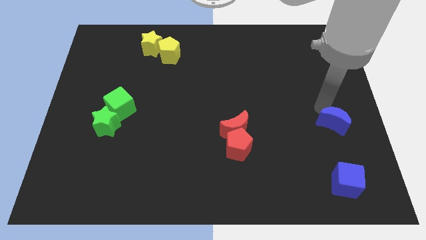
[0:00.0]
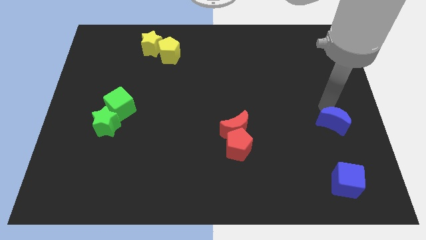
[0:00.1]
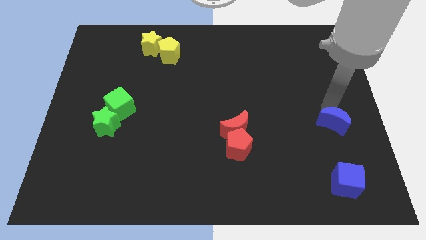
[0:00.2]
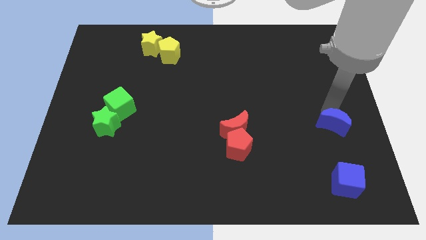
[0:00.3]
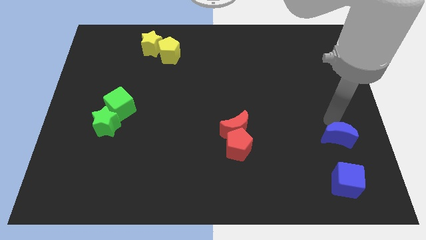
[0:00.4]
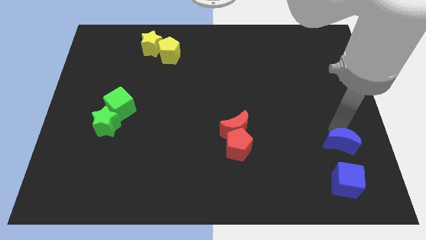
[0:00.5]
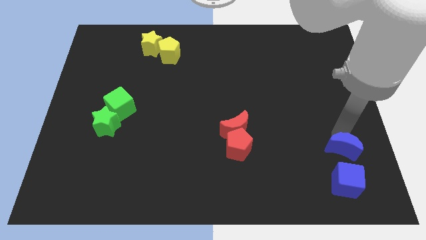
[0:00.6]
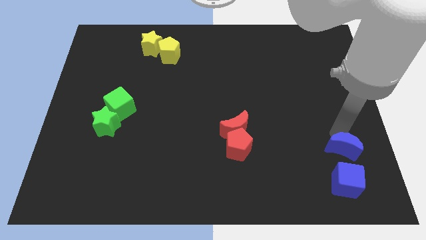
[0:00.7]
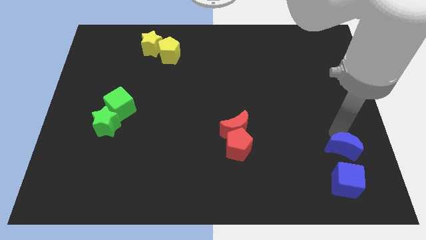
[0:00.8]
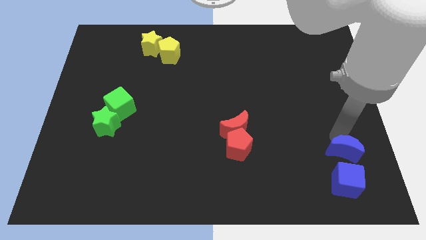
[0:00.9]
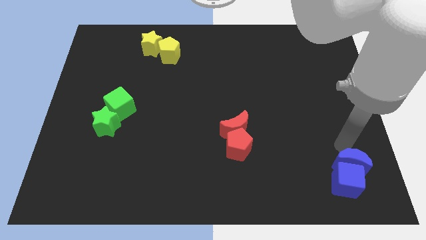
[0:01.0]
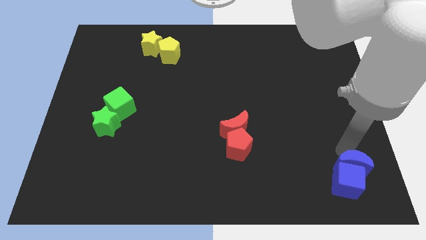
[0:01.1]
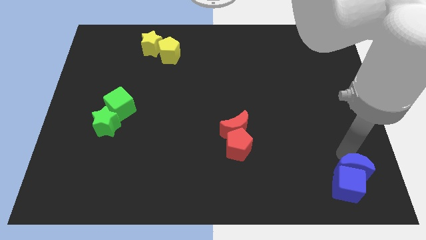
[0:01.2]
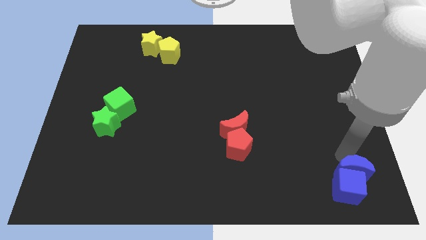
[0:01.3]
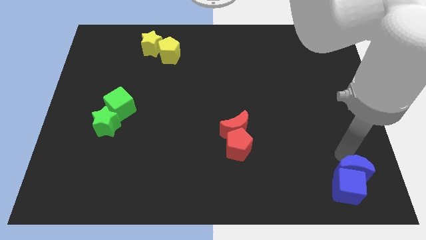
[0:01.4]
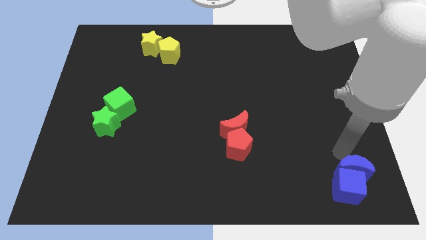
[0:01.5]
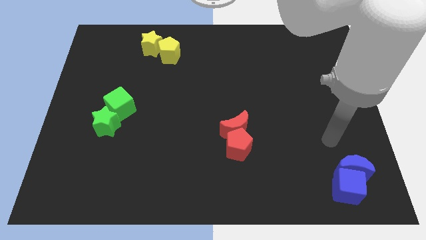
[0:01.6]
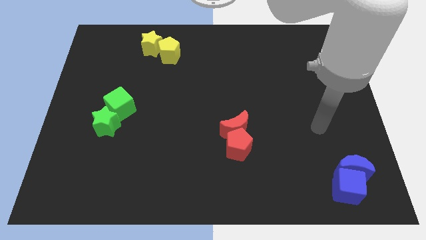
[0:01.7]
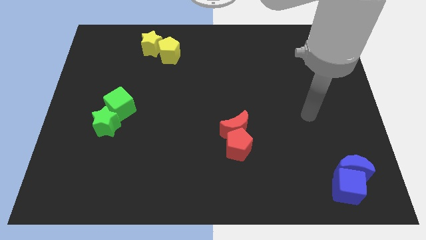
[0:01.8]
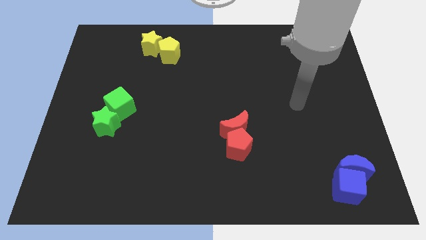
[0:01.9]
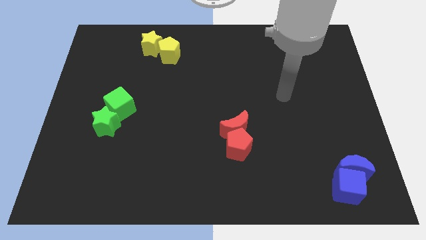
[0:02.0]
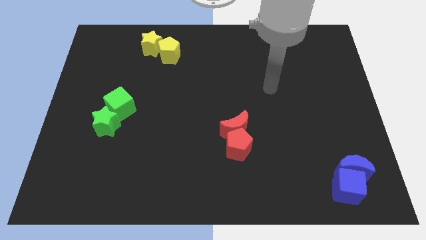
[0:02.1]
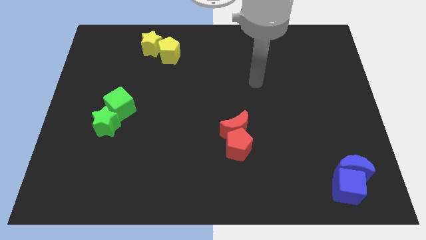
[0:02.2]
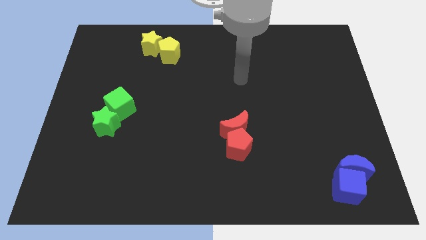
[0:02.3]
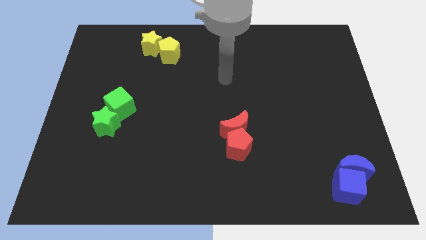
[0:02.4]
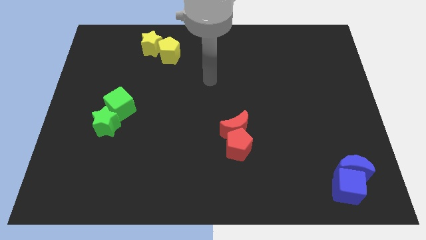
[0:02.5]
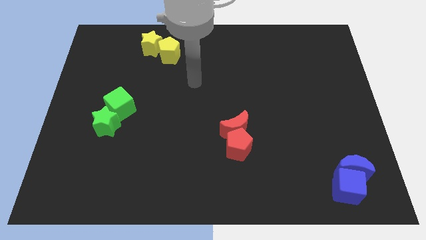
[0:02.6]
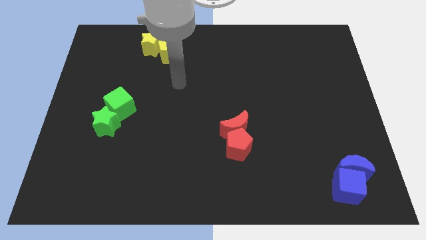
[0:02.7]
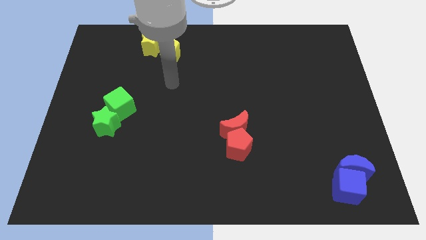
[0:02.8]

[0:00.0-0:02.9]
move your arm towards the yellow pentagon

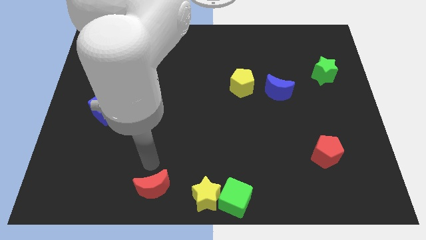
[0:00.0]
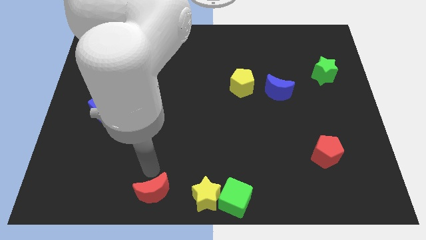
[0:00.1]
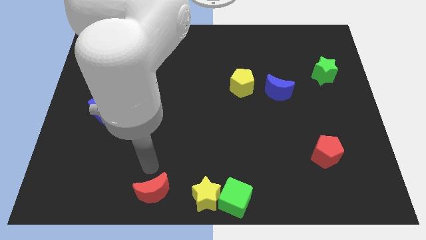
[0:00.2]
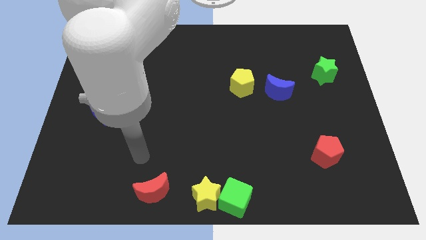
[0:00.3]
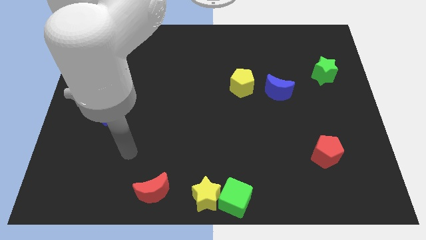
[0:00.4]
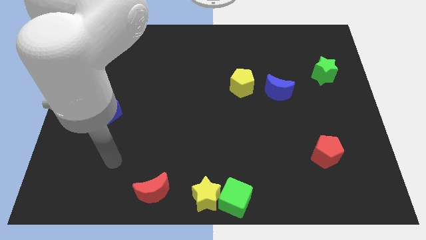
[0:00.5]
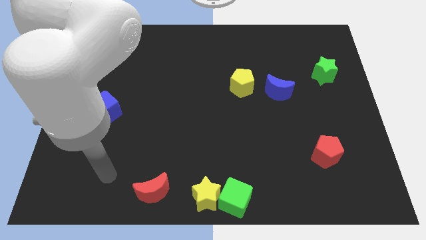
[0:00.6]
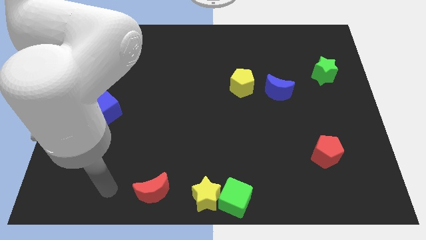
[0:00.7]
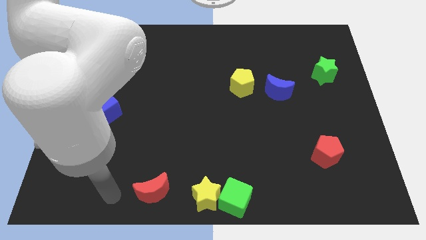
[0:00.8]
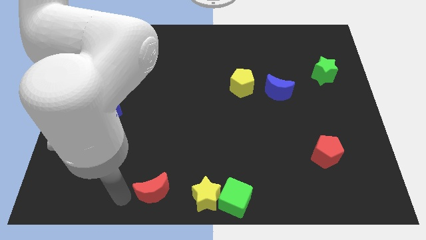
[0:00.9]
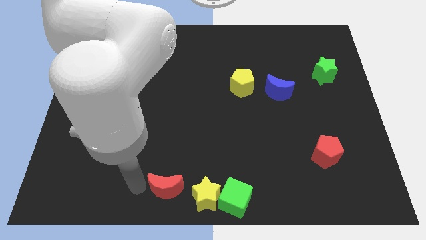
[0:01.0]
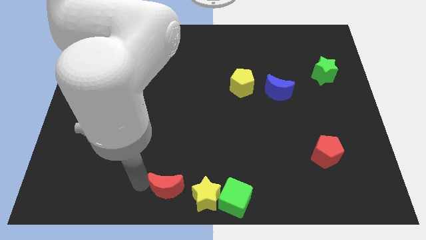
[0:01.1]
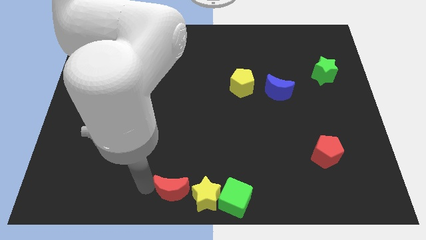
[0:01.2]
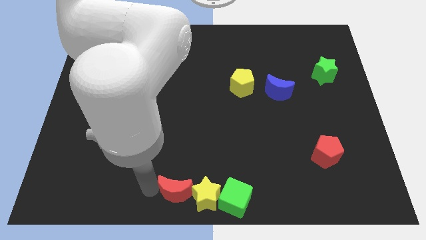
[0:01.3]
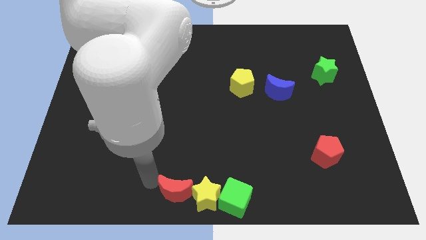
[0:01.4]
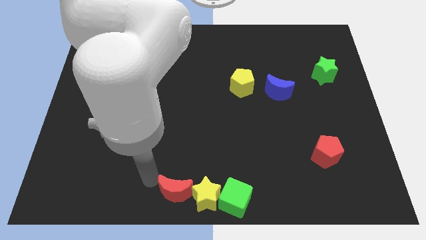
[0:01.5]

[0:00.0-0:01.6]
make a horizontal line with red moonyellow star and green cube at the bottom center of the board

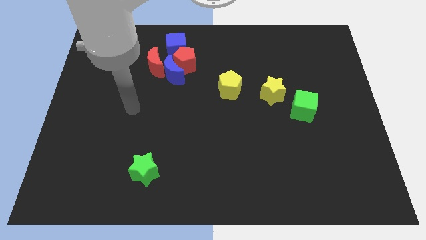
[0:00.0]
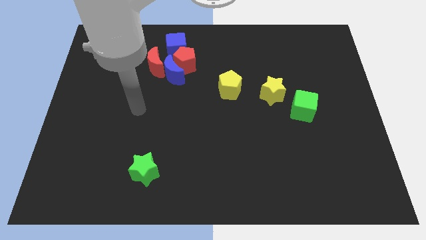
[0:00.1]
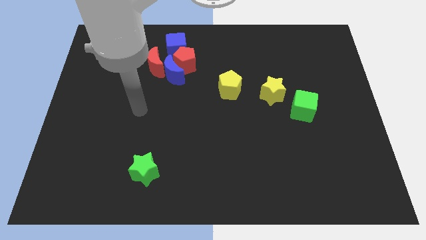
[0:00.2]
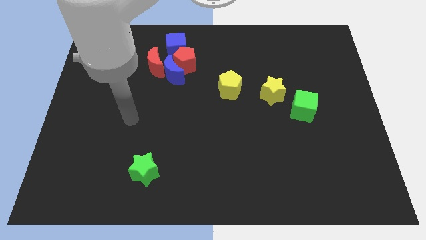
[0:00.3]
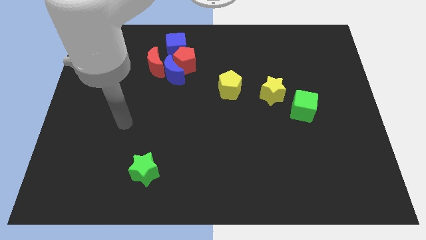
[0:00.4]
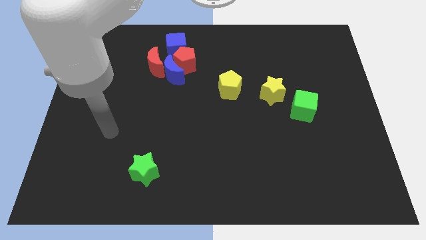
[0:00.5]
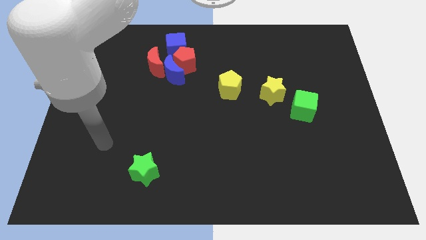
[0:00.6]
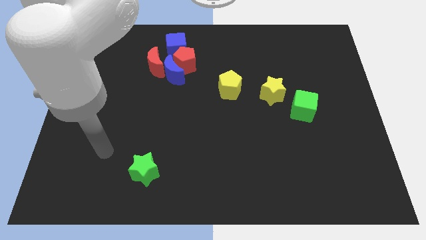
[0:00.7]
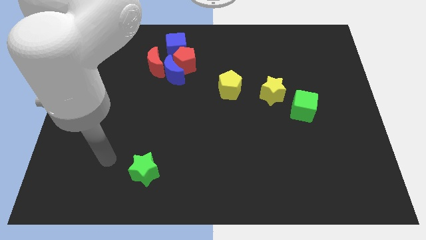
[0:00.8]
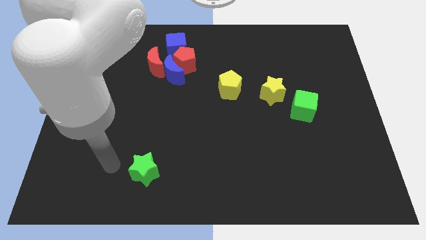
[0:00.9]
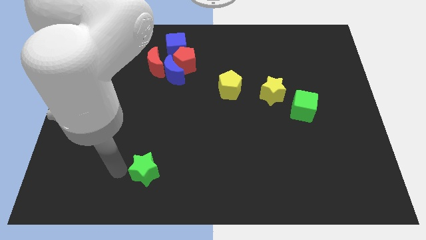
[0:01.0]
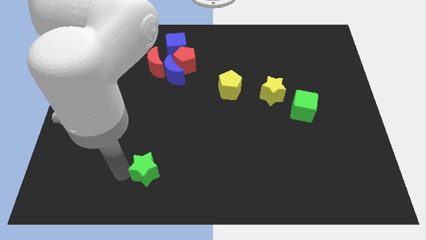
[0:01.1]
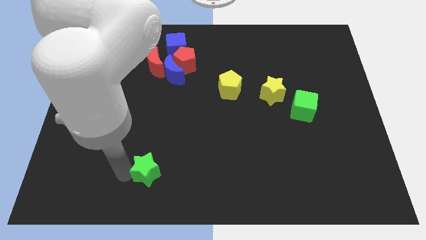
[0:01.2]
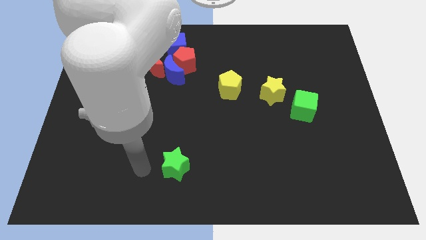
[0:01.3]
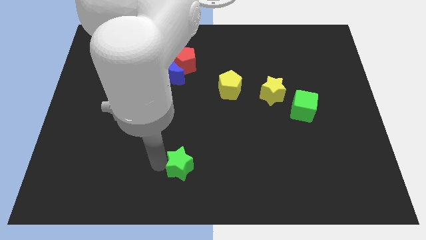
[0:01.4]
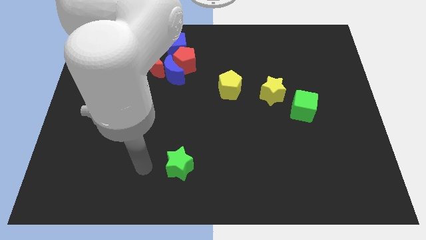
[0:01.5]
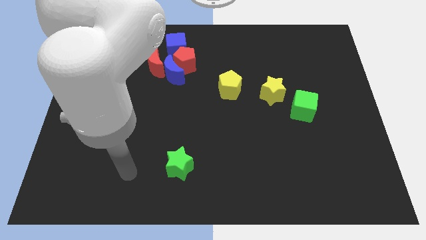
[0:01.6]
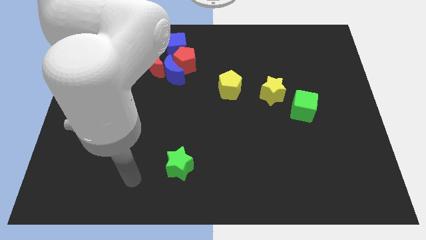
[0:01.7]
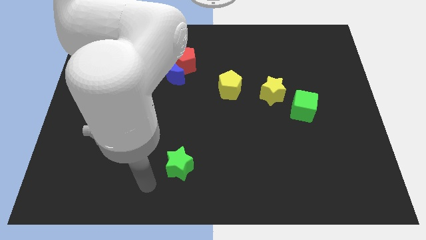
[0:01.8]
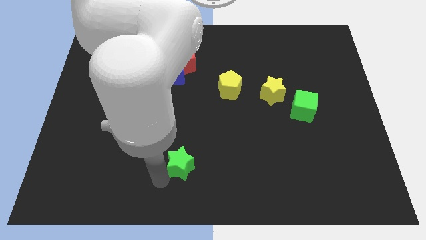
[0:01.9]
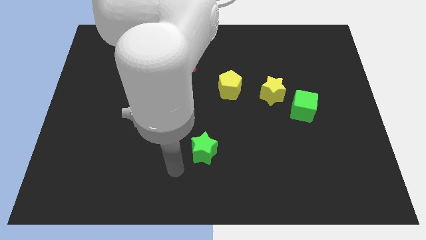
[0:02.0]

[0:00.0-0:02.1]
push the green star to the center of the board

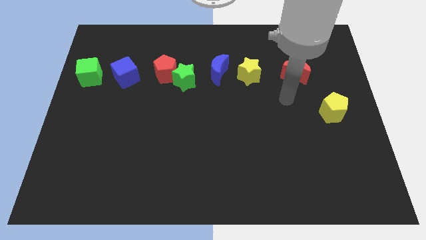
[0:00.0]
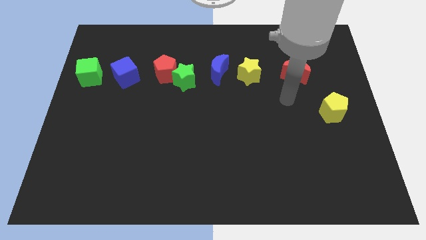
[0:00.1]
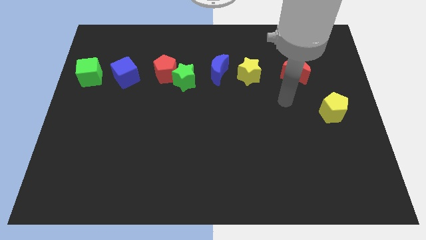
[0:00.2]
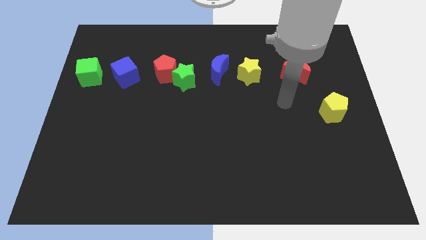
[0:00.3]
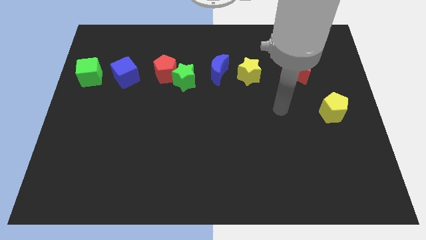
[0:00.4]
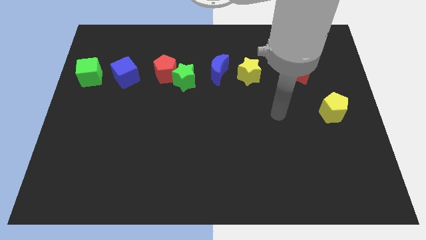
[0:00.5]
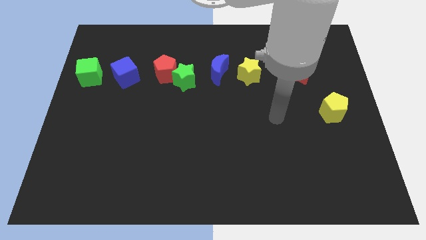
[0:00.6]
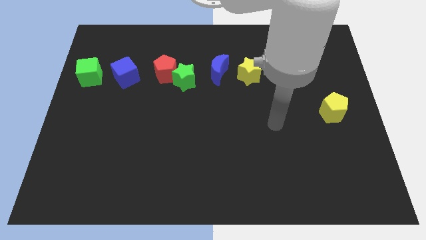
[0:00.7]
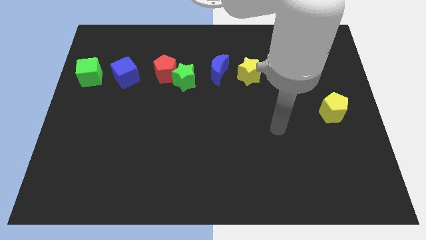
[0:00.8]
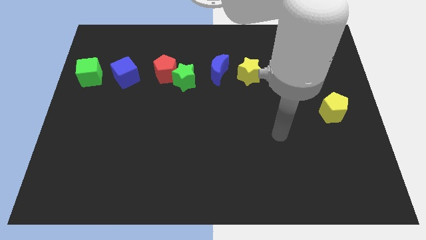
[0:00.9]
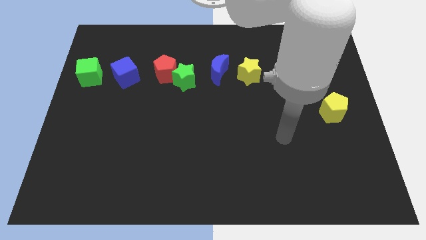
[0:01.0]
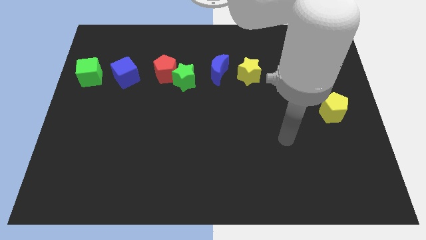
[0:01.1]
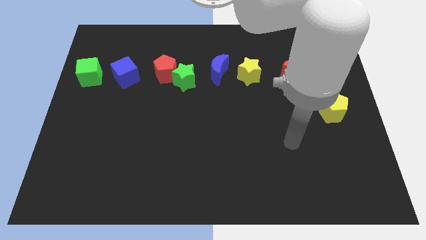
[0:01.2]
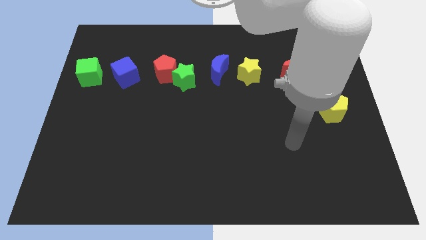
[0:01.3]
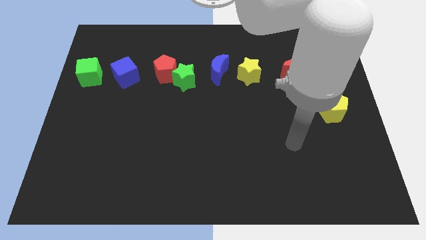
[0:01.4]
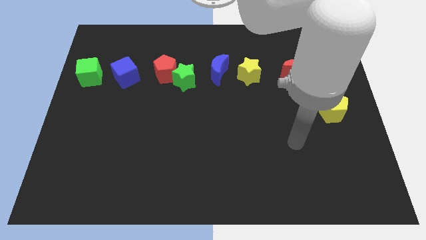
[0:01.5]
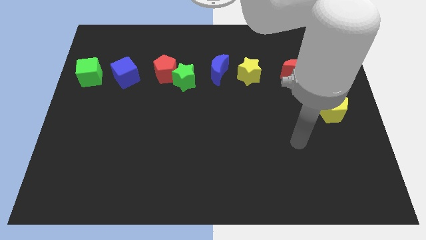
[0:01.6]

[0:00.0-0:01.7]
move your arm away from red moon

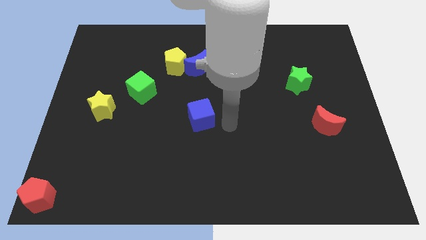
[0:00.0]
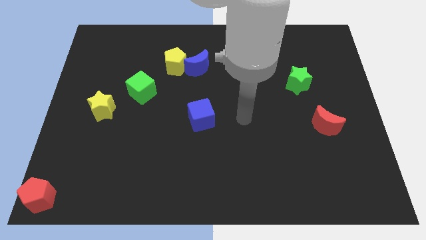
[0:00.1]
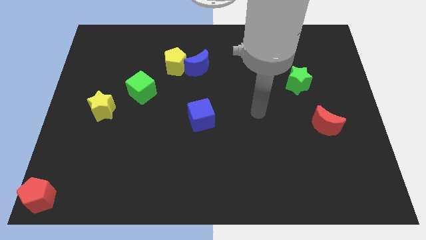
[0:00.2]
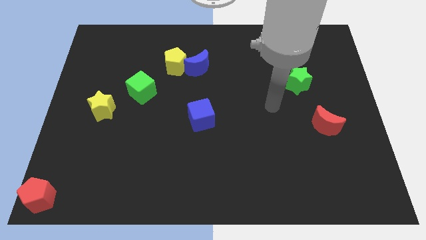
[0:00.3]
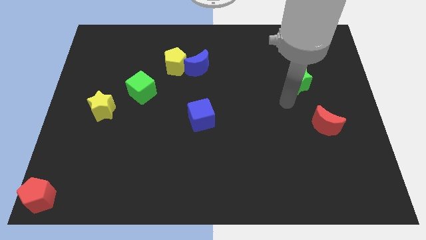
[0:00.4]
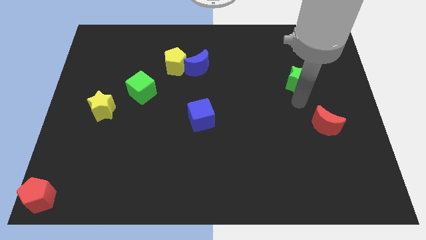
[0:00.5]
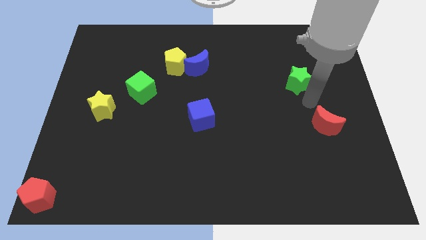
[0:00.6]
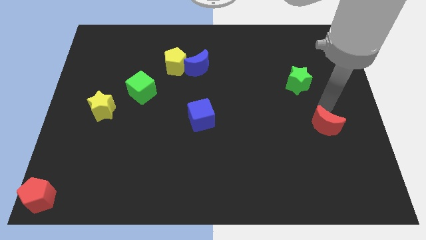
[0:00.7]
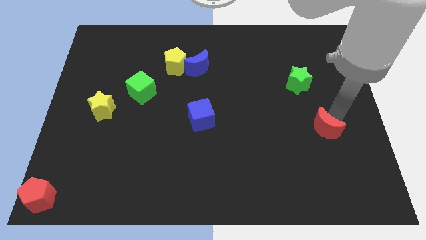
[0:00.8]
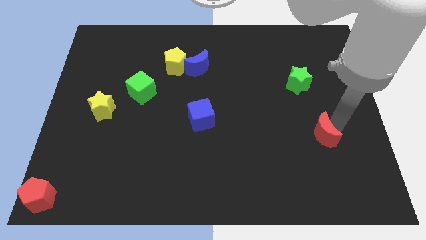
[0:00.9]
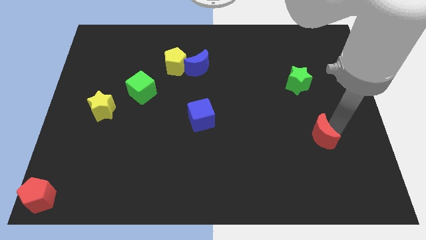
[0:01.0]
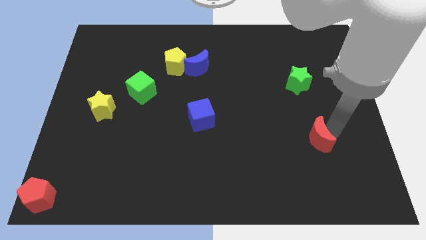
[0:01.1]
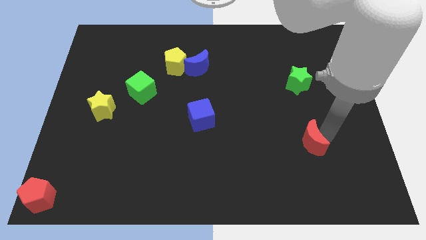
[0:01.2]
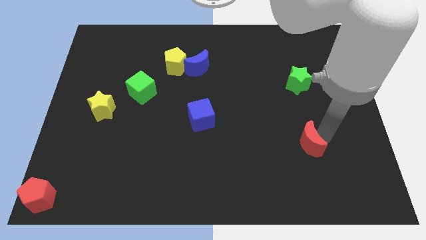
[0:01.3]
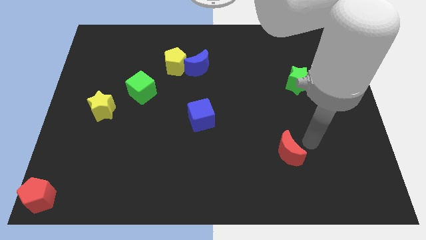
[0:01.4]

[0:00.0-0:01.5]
put the red moon vertically below the green star
